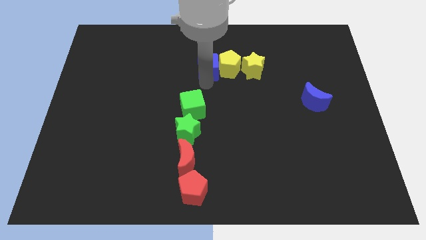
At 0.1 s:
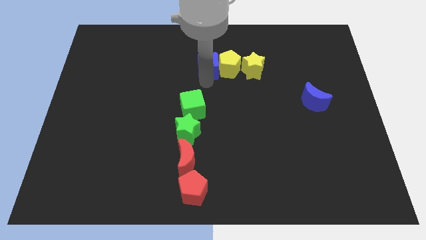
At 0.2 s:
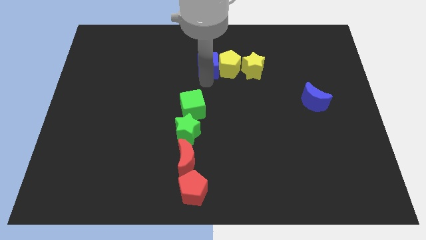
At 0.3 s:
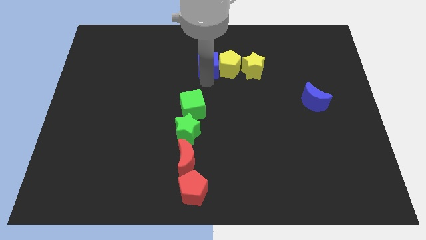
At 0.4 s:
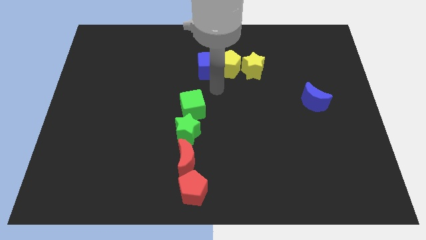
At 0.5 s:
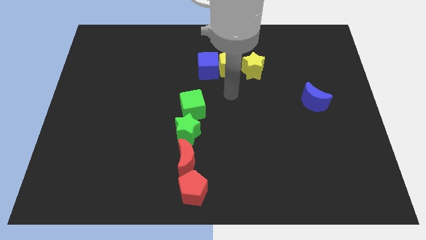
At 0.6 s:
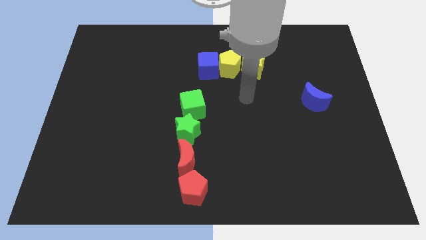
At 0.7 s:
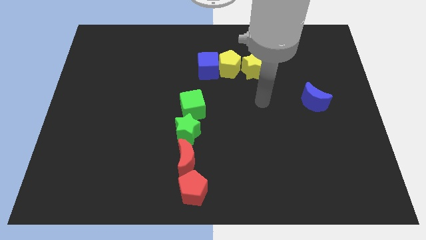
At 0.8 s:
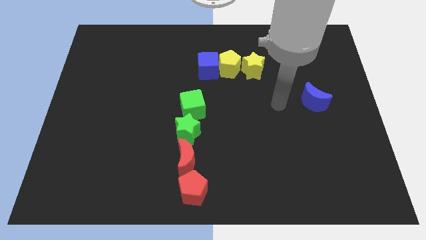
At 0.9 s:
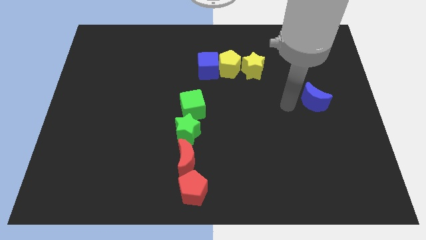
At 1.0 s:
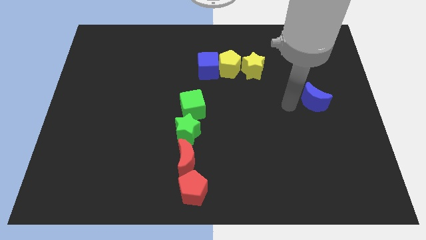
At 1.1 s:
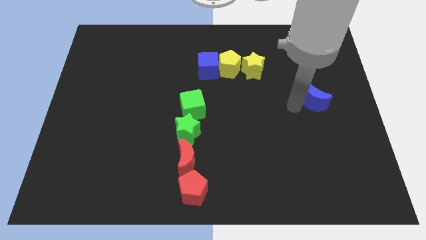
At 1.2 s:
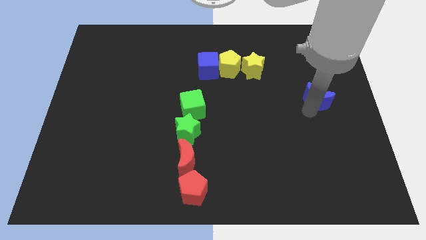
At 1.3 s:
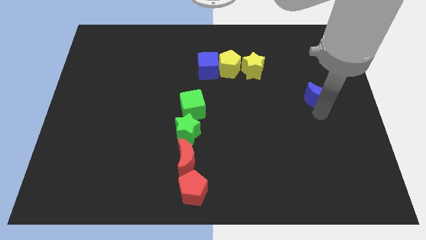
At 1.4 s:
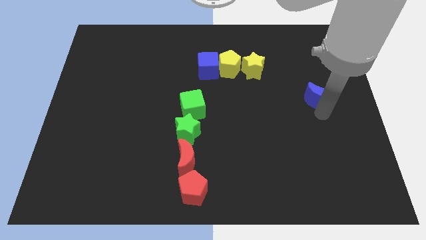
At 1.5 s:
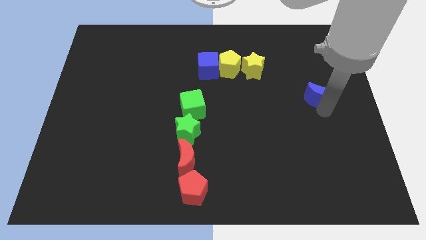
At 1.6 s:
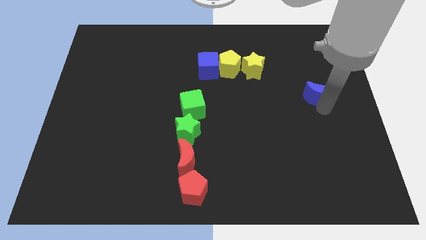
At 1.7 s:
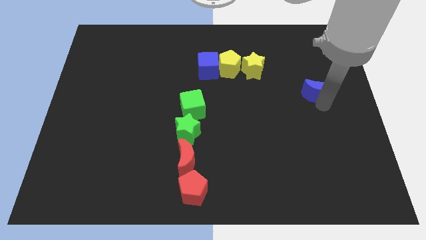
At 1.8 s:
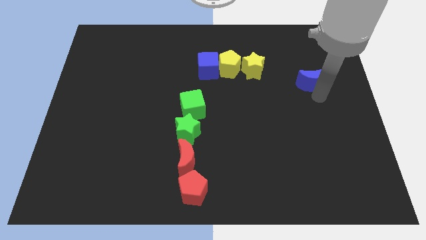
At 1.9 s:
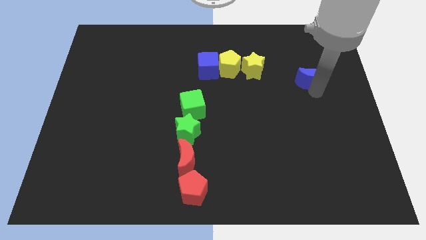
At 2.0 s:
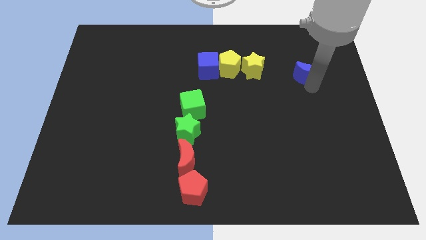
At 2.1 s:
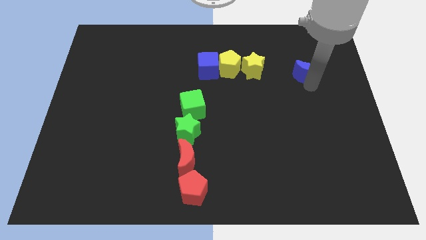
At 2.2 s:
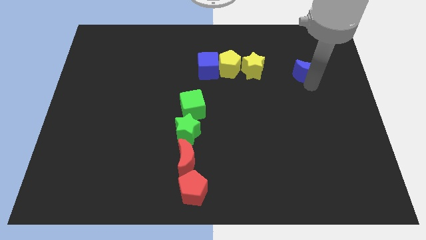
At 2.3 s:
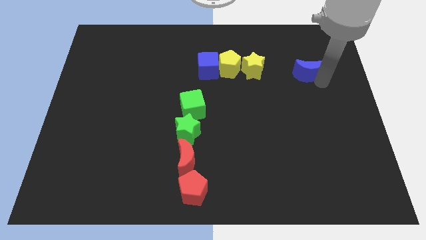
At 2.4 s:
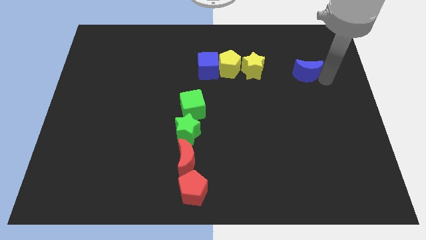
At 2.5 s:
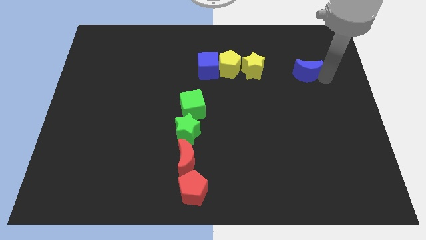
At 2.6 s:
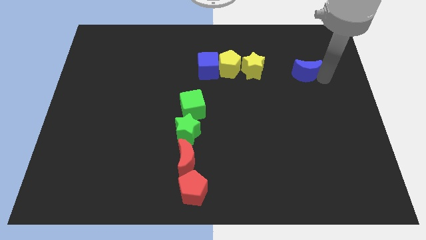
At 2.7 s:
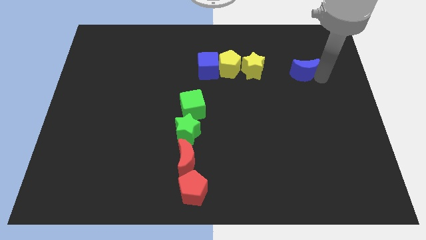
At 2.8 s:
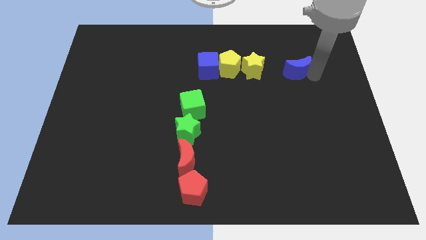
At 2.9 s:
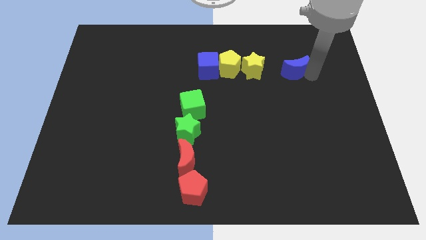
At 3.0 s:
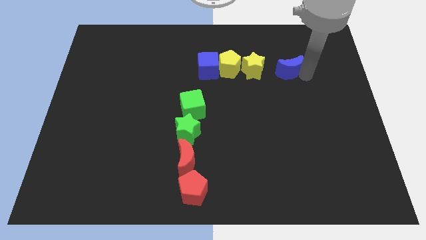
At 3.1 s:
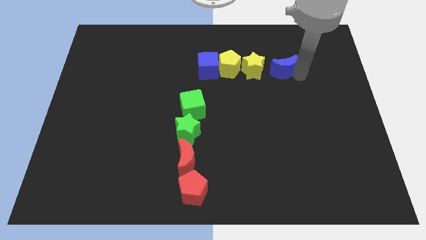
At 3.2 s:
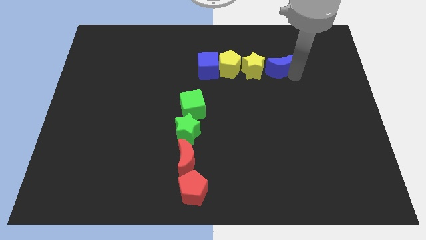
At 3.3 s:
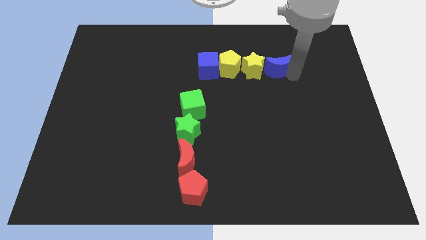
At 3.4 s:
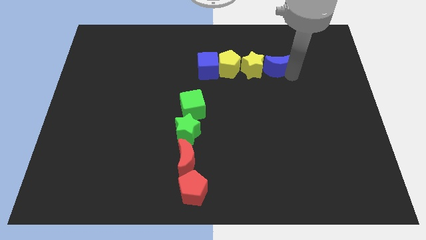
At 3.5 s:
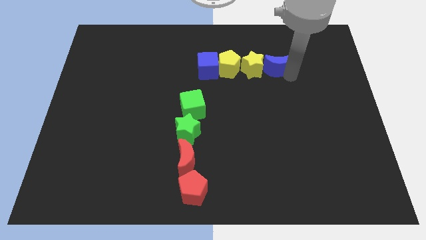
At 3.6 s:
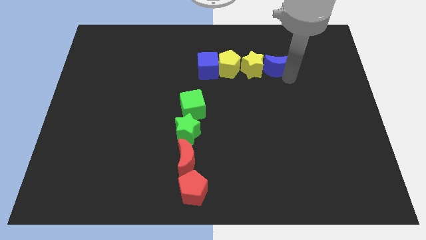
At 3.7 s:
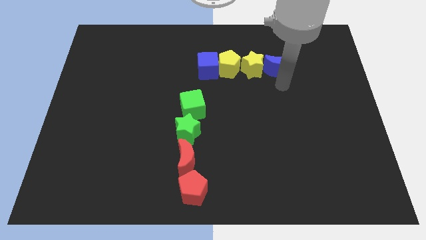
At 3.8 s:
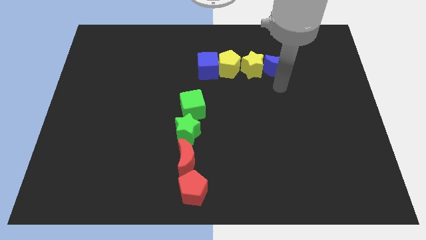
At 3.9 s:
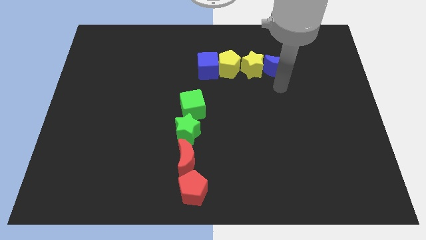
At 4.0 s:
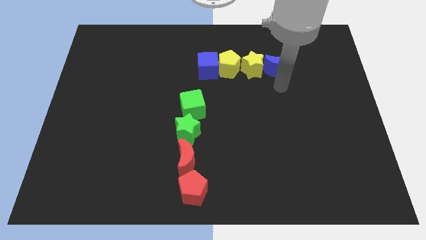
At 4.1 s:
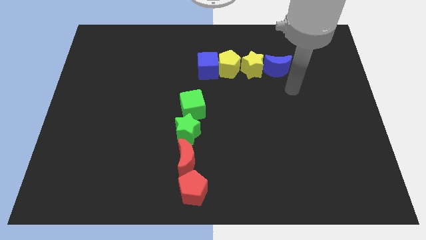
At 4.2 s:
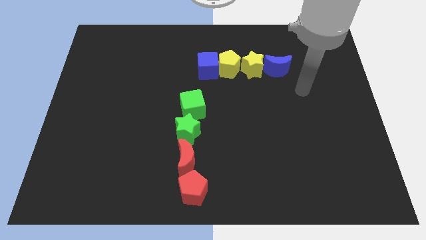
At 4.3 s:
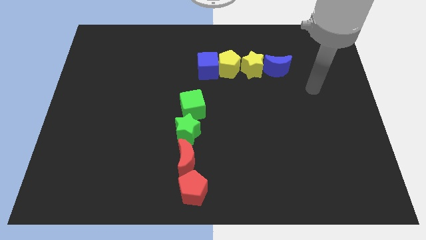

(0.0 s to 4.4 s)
push the blue moon to the right side of the yellow star

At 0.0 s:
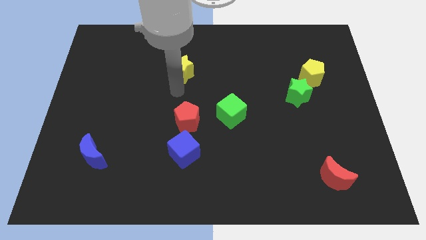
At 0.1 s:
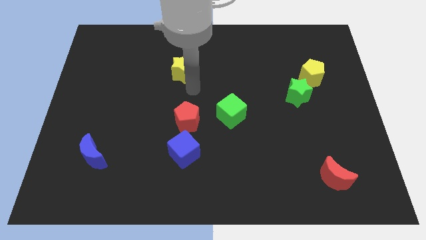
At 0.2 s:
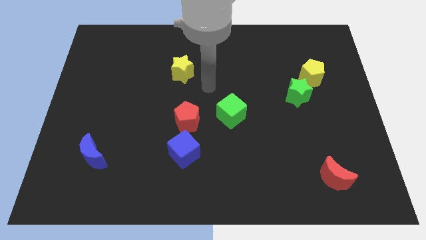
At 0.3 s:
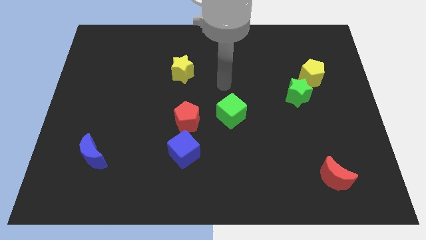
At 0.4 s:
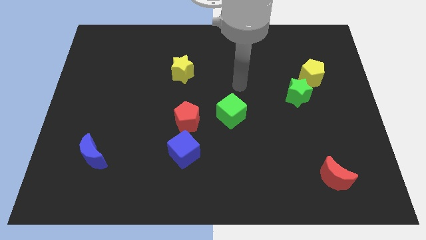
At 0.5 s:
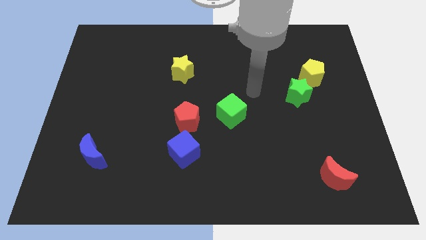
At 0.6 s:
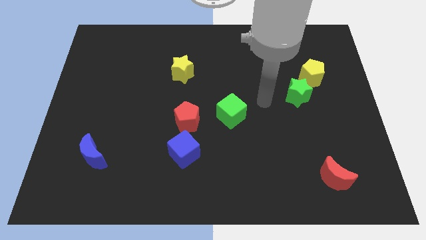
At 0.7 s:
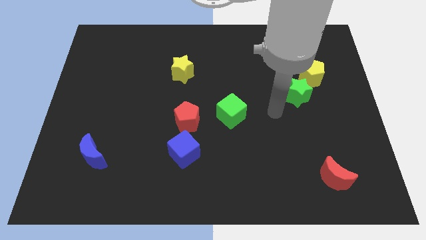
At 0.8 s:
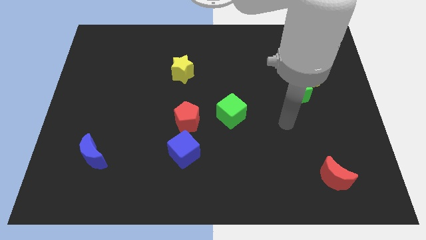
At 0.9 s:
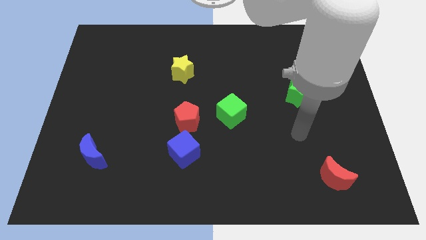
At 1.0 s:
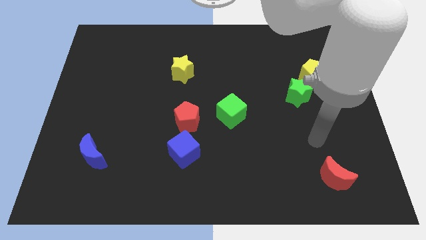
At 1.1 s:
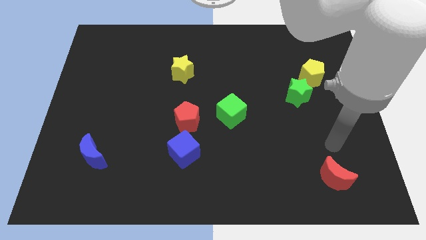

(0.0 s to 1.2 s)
move the arm close to the red moon

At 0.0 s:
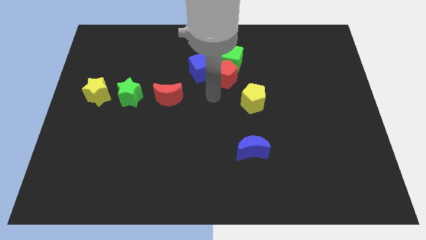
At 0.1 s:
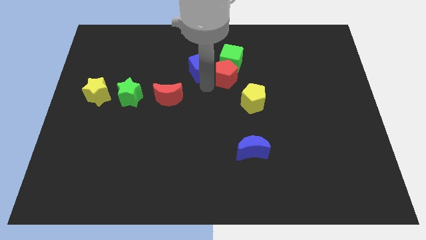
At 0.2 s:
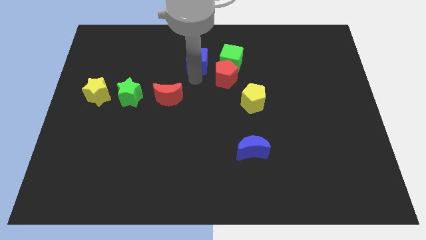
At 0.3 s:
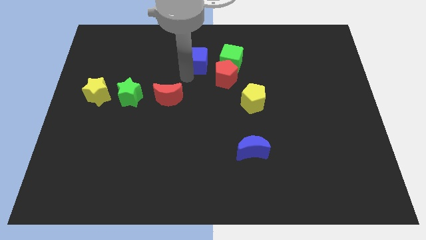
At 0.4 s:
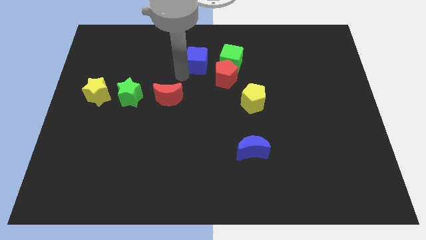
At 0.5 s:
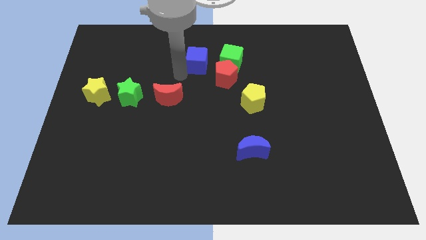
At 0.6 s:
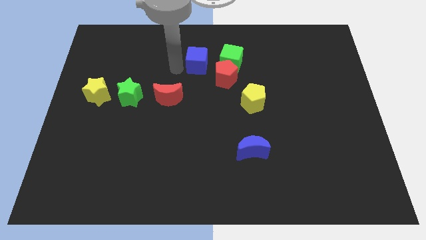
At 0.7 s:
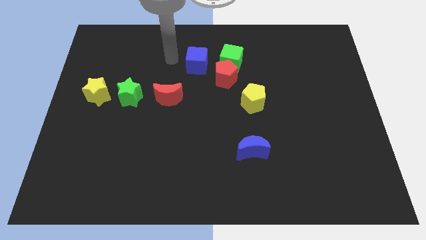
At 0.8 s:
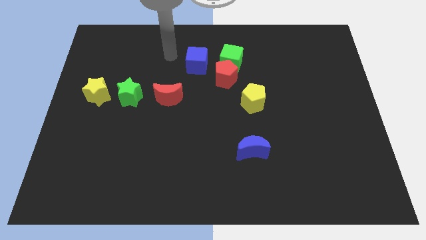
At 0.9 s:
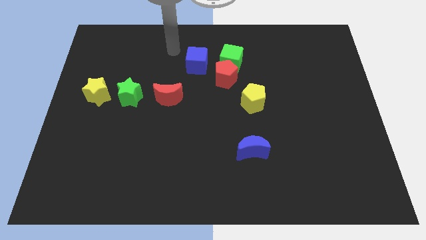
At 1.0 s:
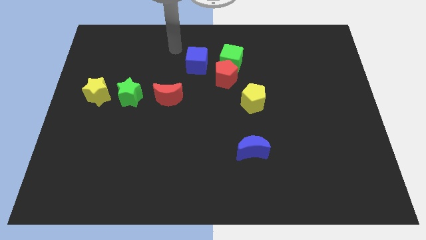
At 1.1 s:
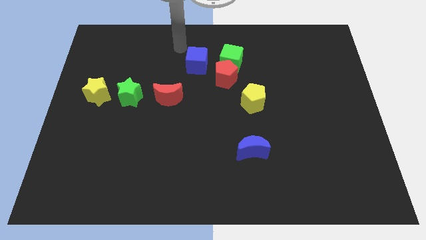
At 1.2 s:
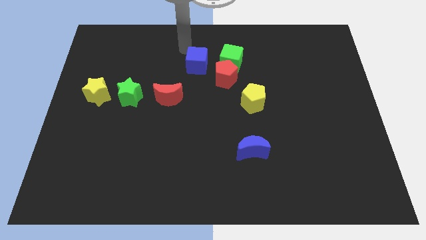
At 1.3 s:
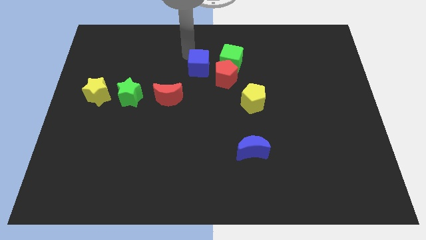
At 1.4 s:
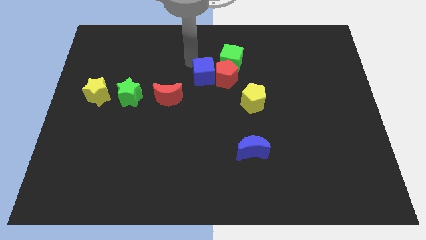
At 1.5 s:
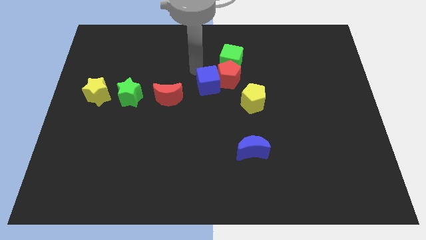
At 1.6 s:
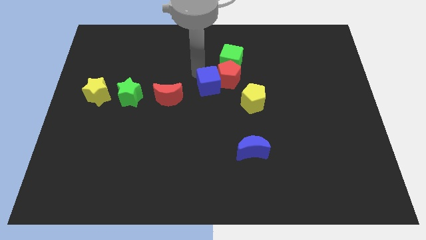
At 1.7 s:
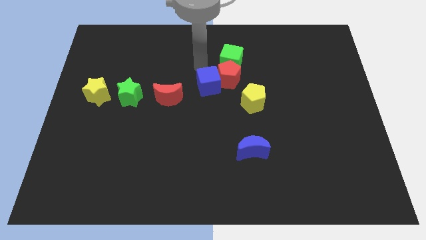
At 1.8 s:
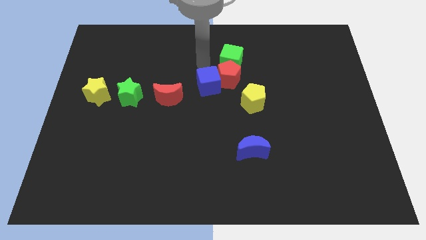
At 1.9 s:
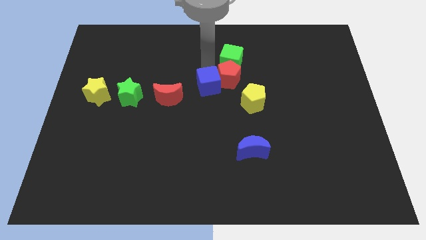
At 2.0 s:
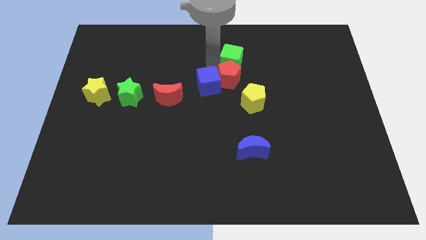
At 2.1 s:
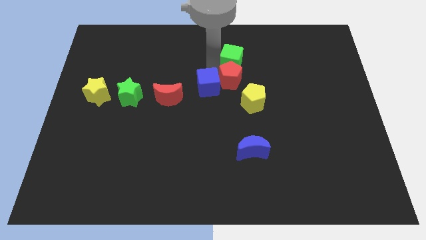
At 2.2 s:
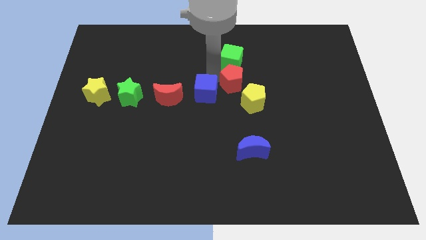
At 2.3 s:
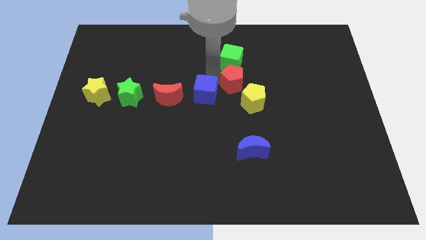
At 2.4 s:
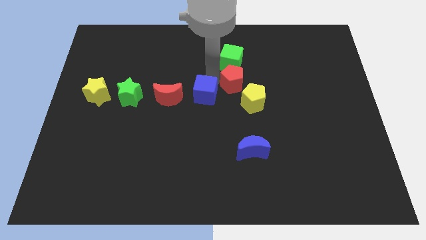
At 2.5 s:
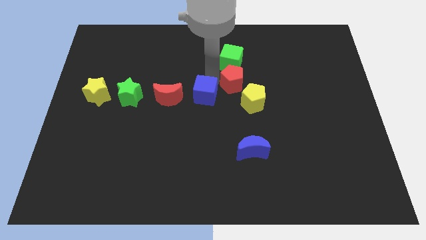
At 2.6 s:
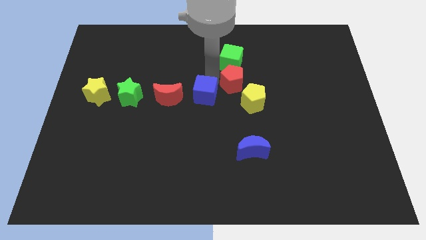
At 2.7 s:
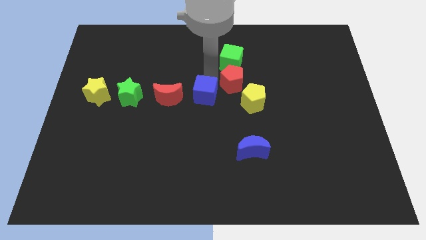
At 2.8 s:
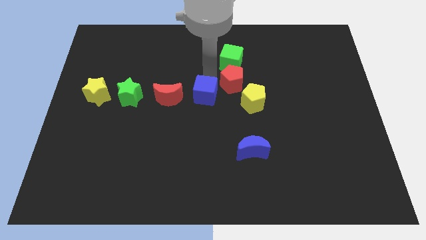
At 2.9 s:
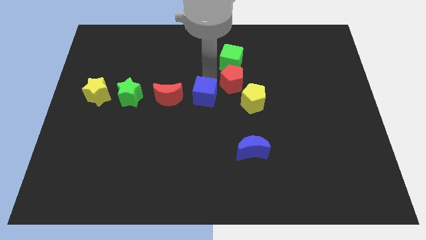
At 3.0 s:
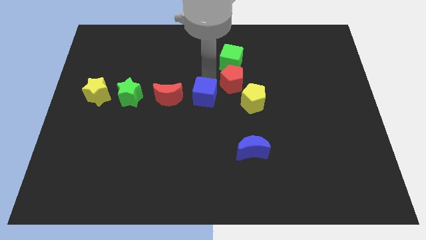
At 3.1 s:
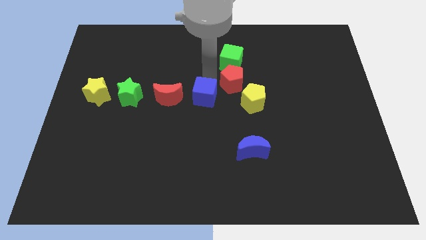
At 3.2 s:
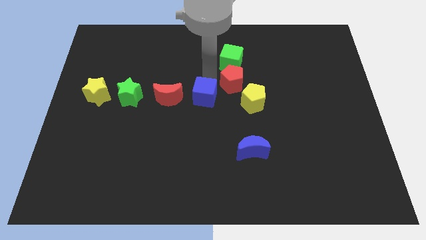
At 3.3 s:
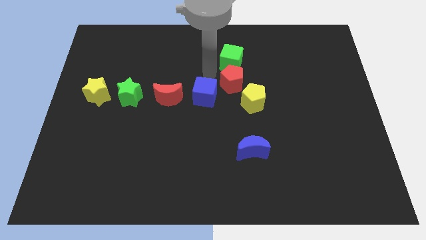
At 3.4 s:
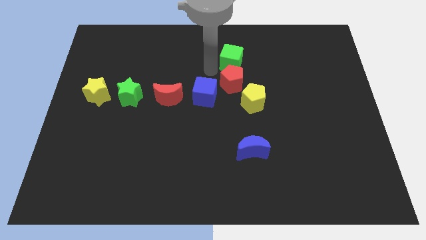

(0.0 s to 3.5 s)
move blue cube downwards
